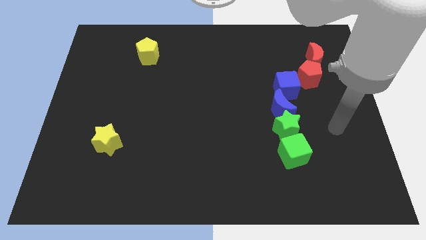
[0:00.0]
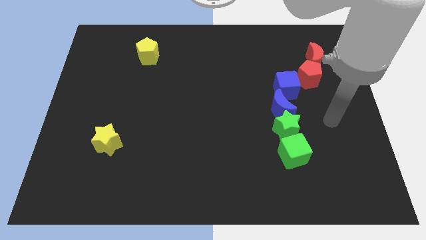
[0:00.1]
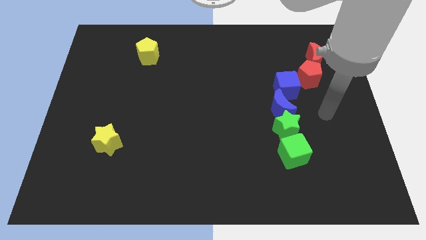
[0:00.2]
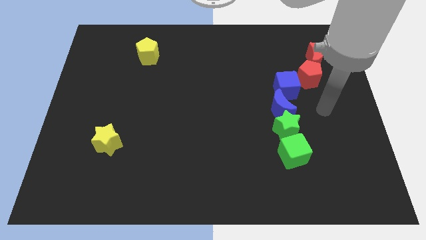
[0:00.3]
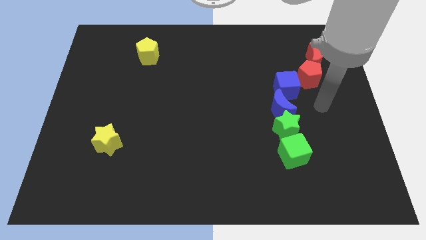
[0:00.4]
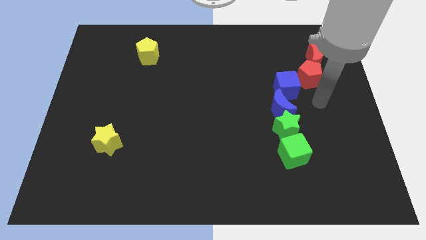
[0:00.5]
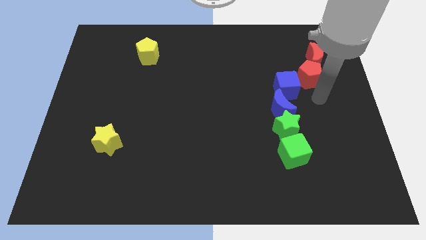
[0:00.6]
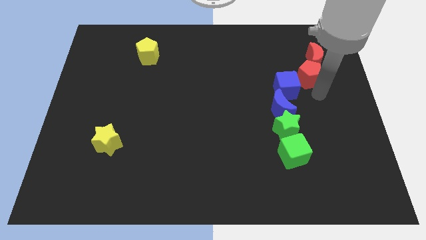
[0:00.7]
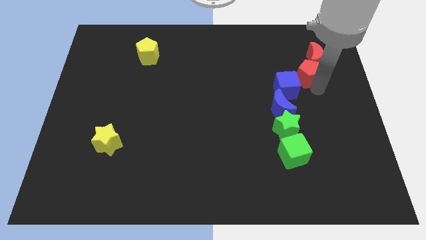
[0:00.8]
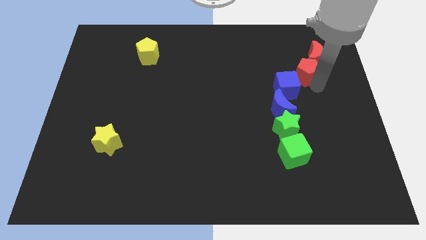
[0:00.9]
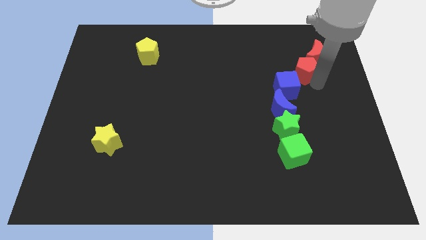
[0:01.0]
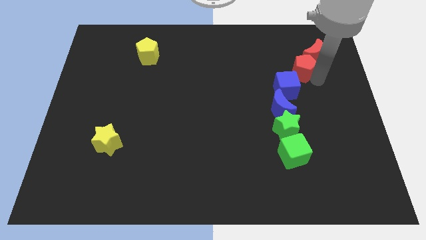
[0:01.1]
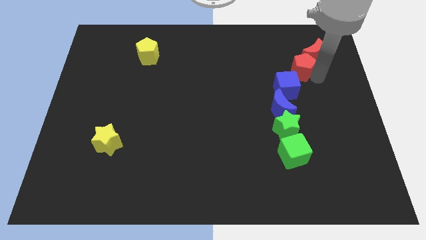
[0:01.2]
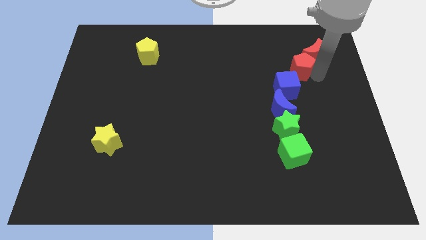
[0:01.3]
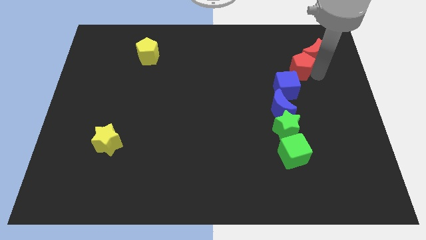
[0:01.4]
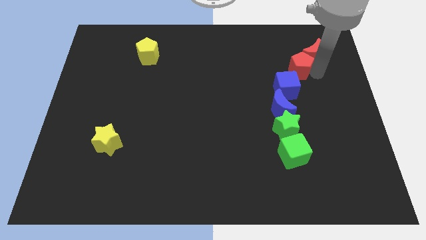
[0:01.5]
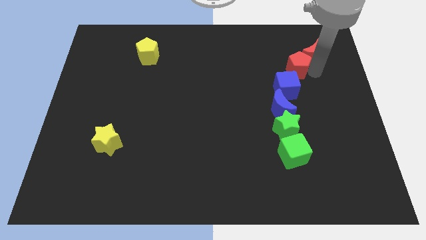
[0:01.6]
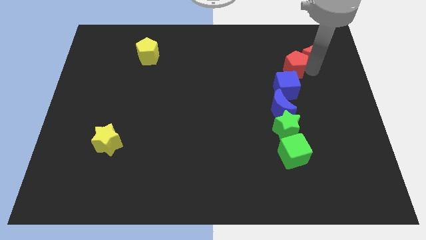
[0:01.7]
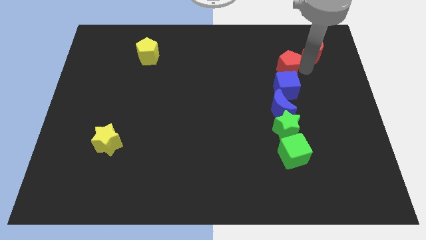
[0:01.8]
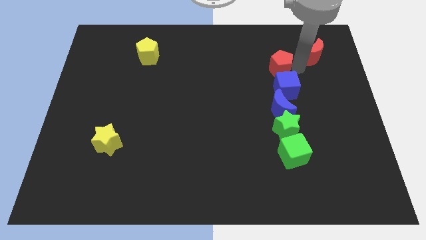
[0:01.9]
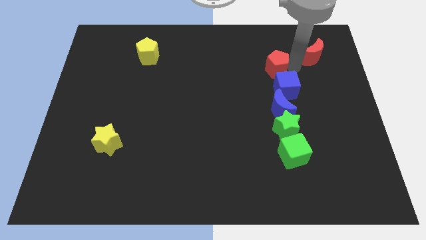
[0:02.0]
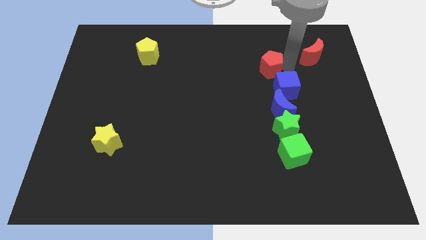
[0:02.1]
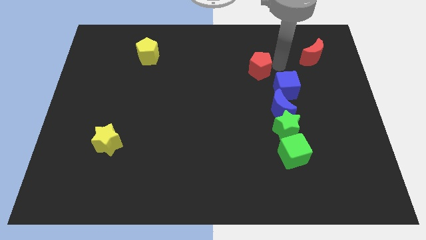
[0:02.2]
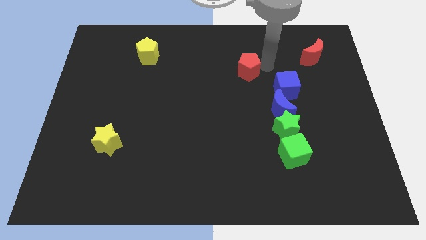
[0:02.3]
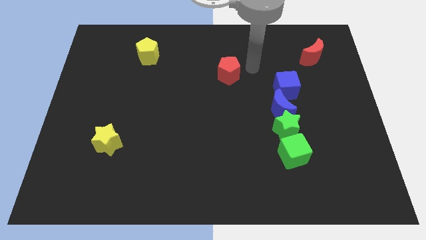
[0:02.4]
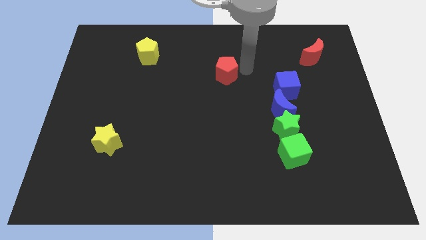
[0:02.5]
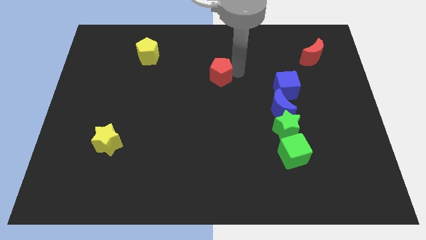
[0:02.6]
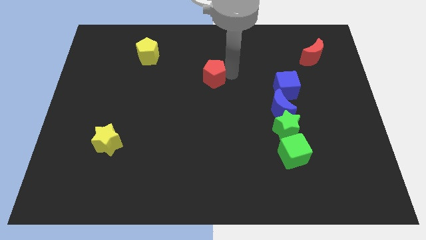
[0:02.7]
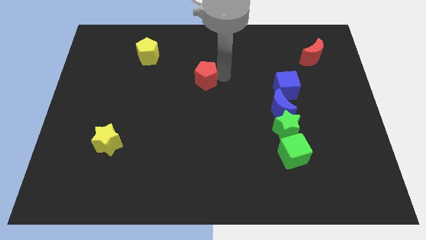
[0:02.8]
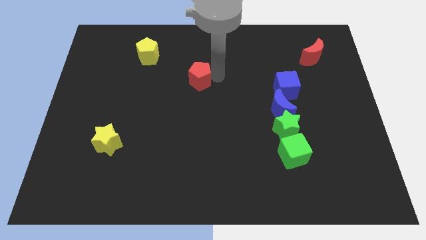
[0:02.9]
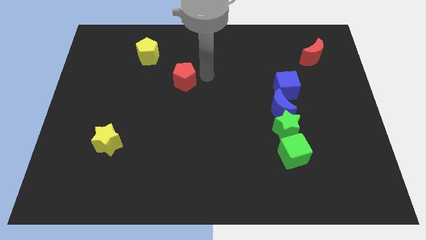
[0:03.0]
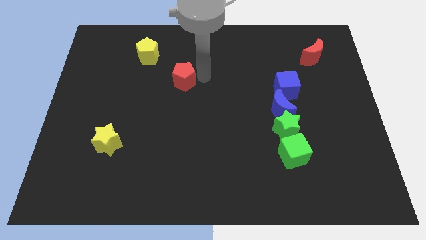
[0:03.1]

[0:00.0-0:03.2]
slide the red pentagon diagonally bottom left to the red moon

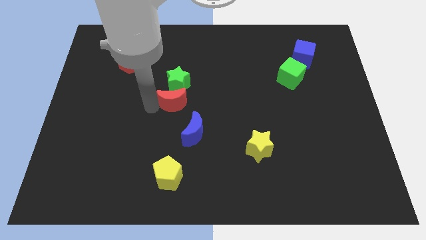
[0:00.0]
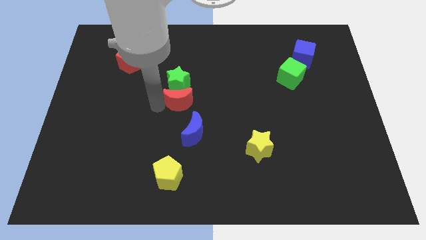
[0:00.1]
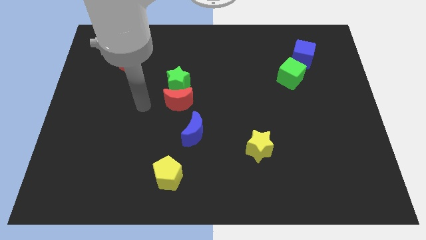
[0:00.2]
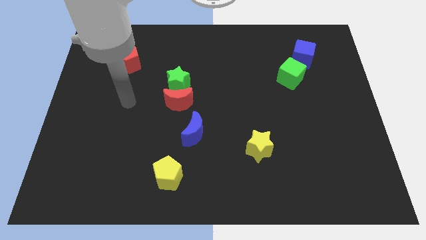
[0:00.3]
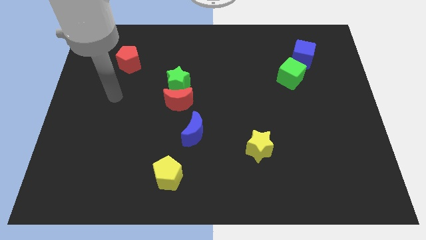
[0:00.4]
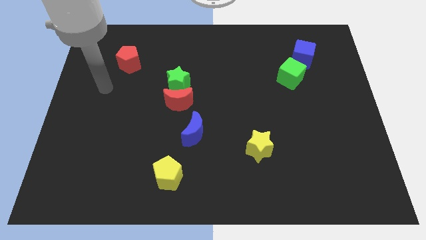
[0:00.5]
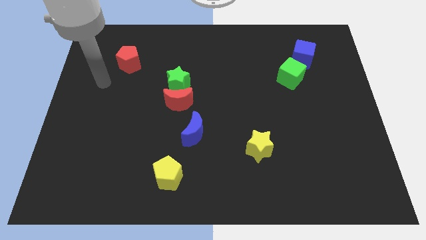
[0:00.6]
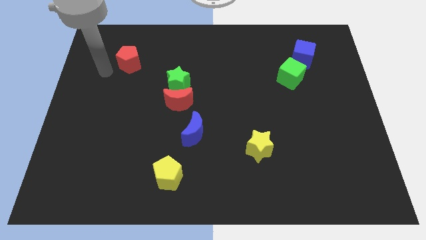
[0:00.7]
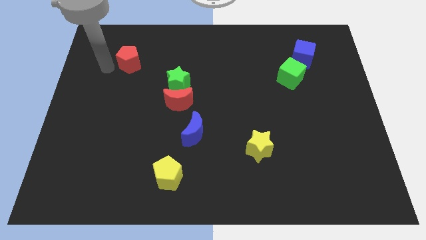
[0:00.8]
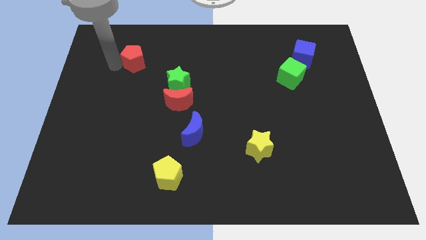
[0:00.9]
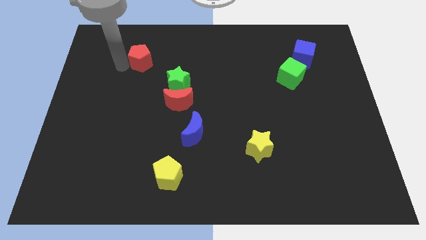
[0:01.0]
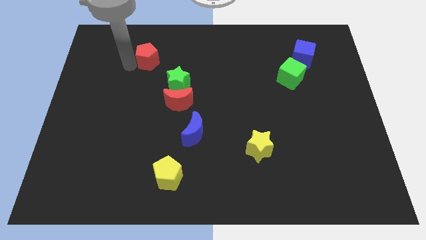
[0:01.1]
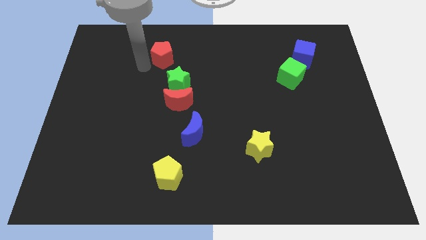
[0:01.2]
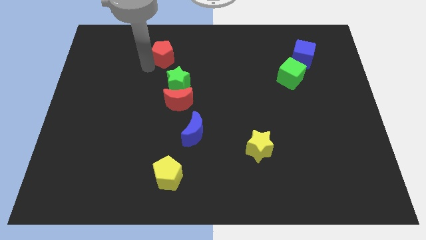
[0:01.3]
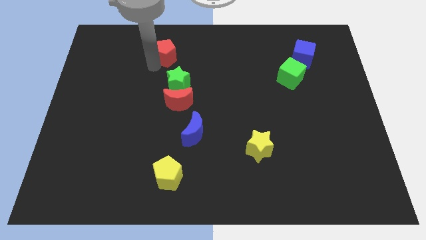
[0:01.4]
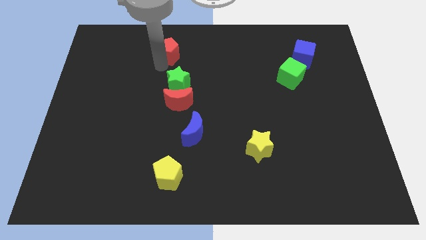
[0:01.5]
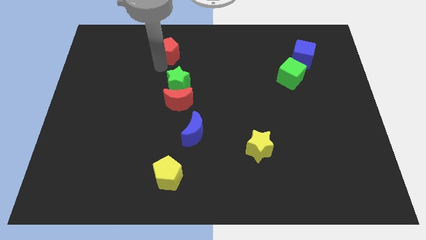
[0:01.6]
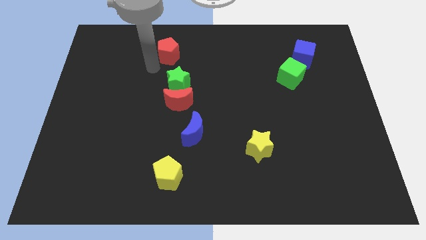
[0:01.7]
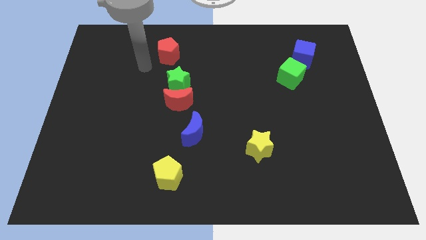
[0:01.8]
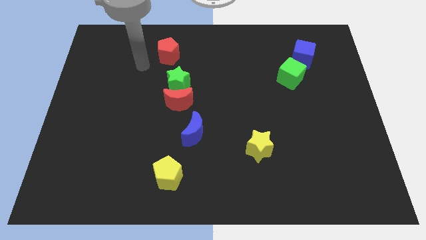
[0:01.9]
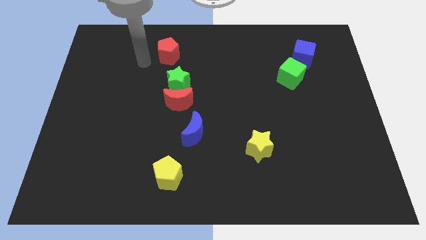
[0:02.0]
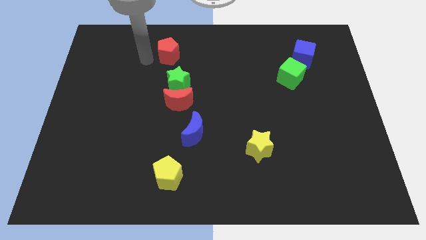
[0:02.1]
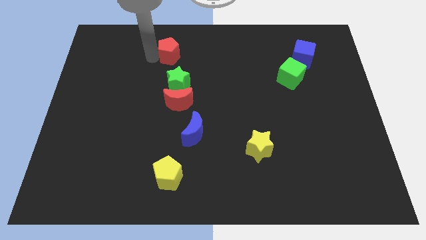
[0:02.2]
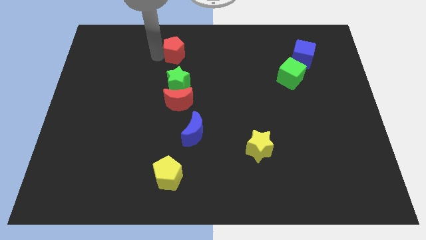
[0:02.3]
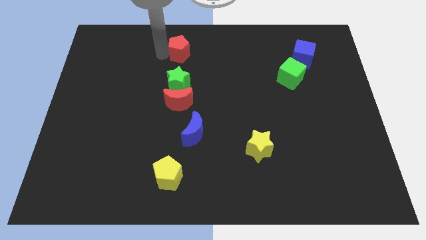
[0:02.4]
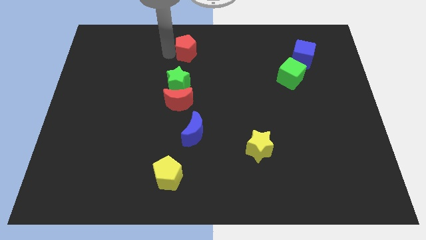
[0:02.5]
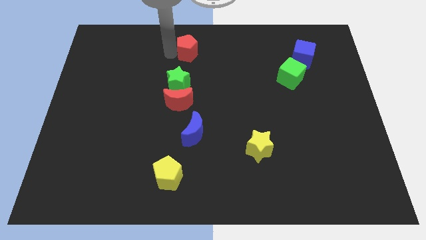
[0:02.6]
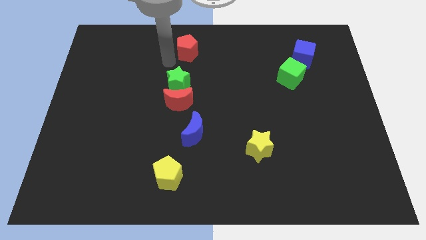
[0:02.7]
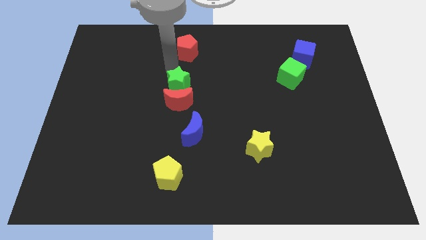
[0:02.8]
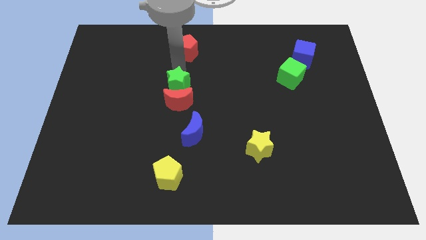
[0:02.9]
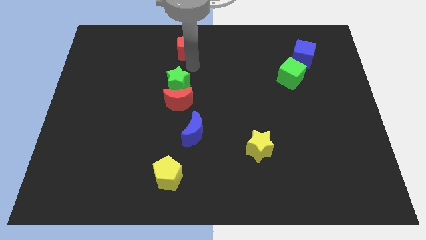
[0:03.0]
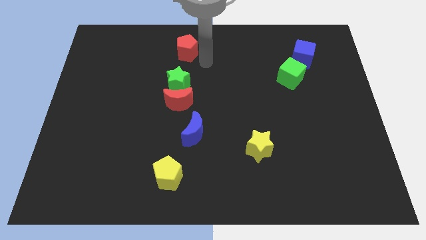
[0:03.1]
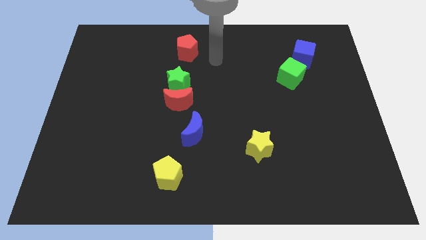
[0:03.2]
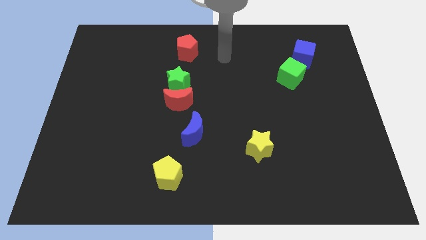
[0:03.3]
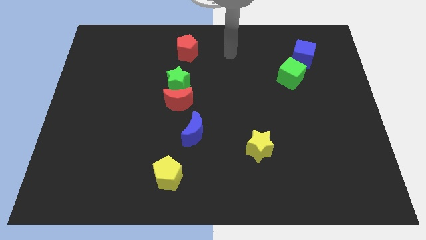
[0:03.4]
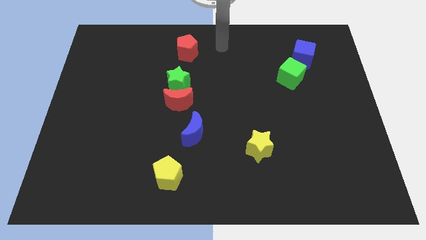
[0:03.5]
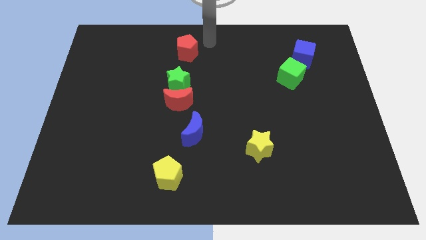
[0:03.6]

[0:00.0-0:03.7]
place red pentagon on the top of green star

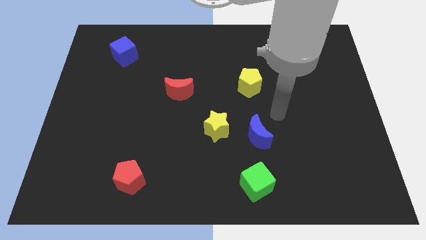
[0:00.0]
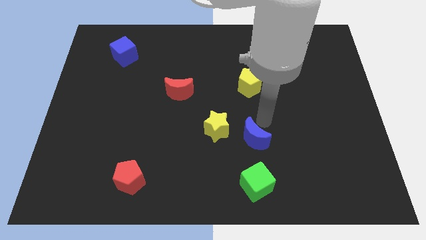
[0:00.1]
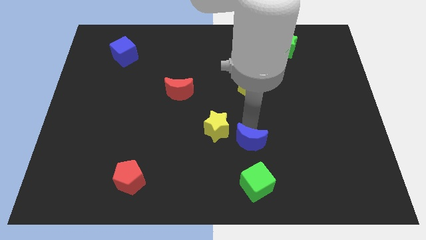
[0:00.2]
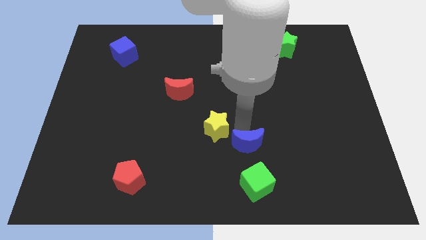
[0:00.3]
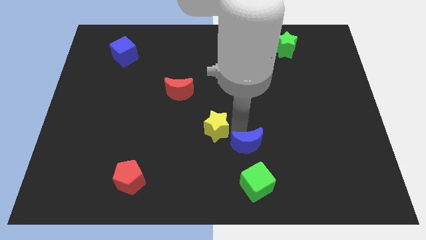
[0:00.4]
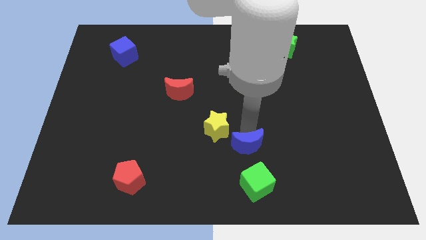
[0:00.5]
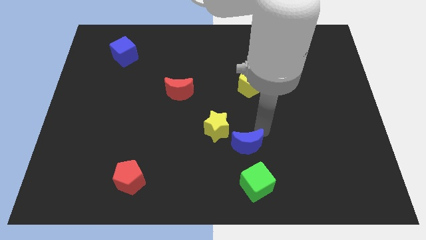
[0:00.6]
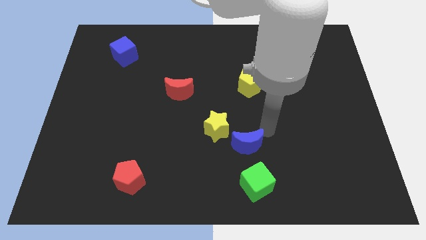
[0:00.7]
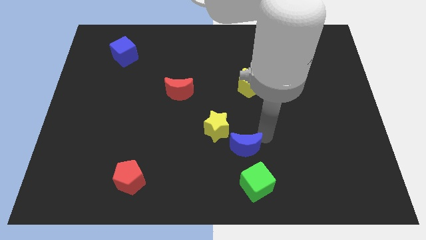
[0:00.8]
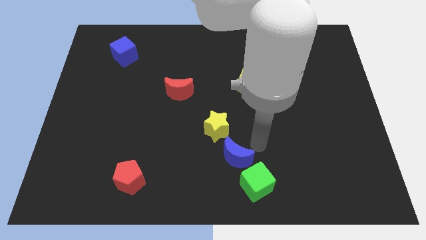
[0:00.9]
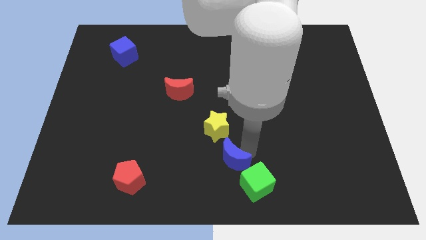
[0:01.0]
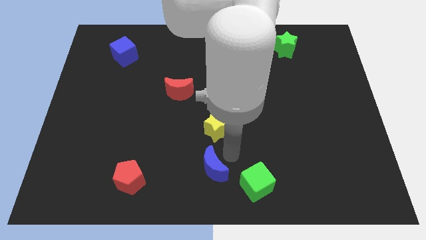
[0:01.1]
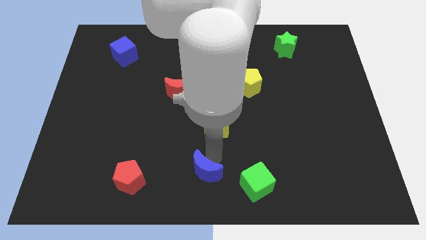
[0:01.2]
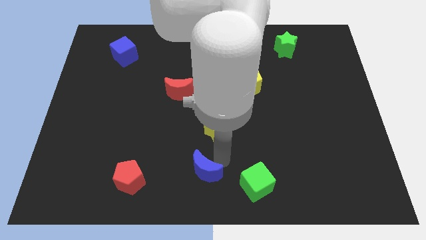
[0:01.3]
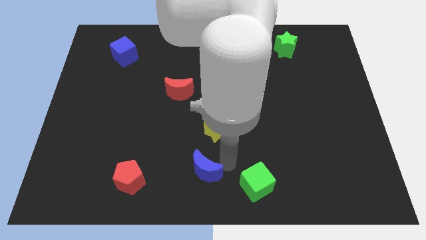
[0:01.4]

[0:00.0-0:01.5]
slide the blue moon diagonally top left to the green cube

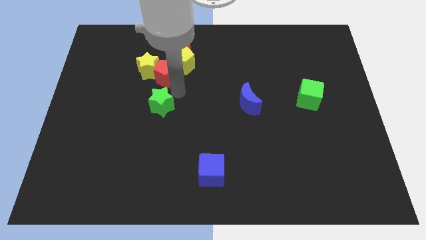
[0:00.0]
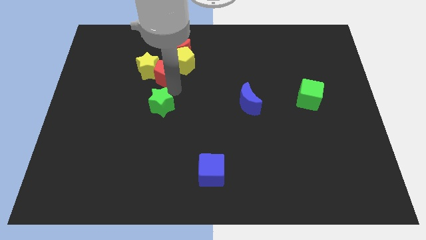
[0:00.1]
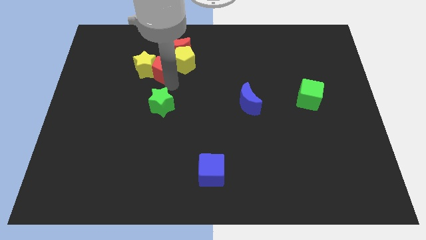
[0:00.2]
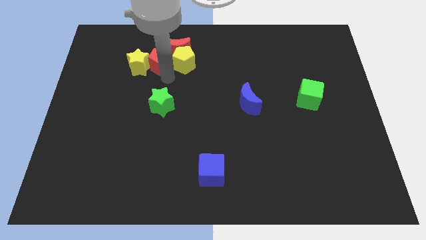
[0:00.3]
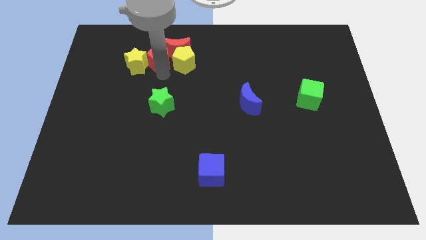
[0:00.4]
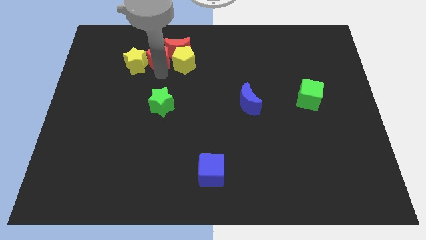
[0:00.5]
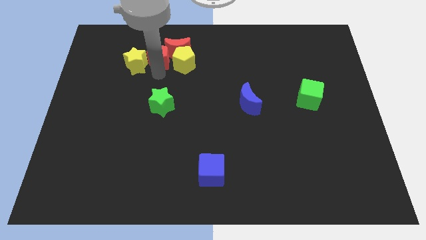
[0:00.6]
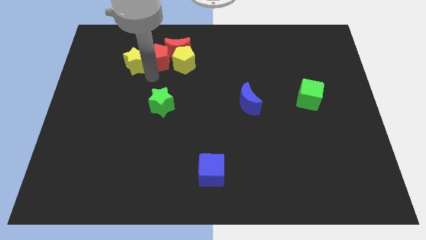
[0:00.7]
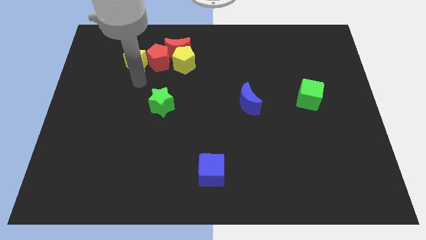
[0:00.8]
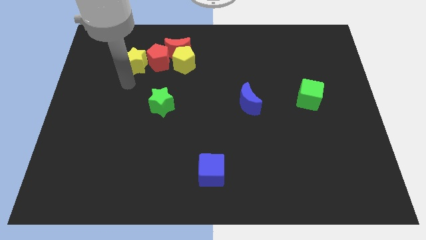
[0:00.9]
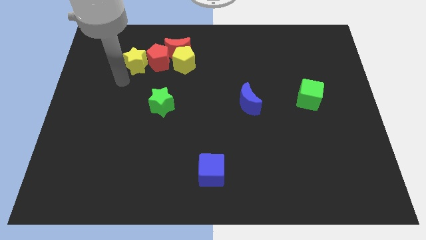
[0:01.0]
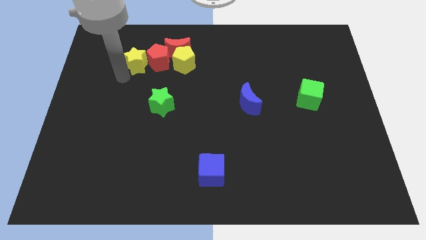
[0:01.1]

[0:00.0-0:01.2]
move red pentagon in between yellow blocks
